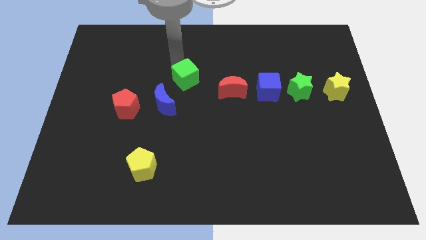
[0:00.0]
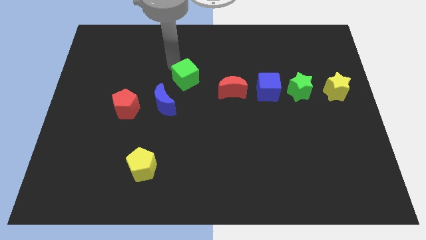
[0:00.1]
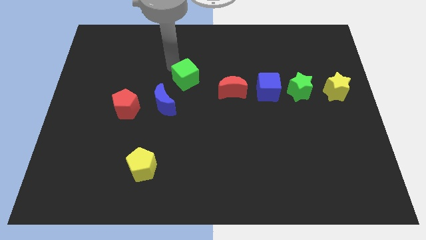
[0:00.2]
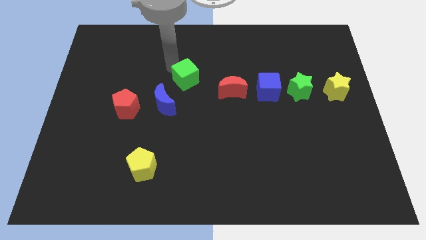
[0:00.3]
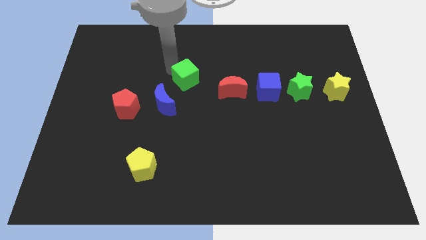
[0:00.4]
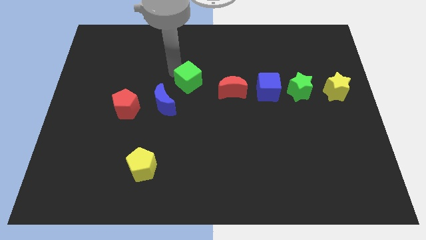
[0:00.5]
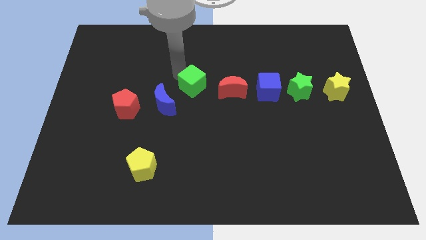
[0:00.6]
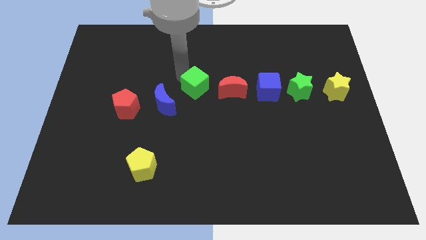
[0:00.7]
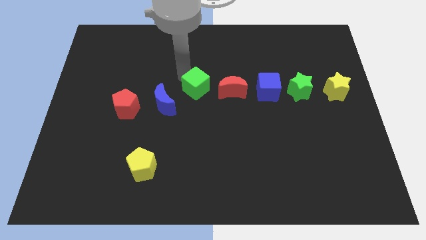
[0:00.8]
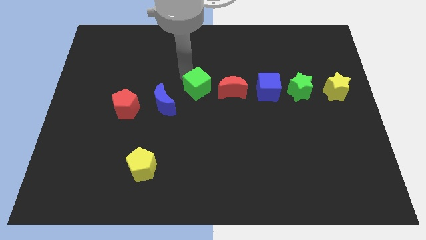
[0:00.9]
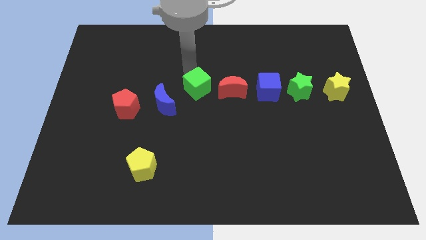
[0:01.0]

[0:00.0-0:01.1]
move green cube left beside the red moon

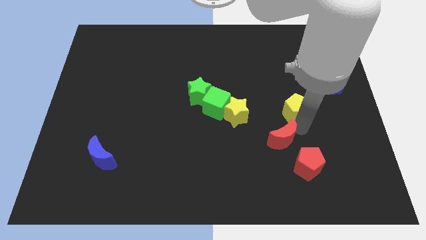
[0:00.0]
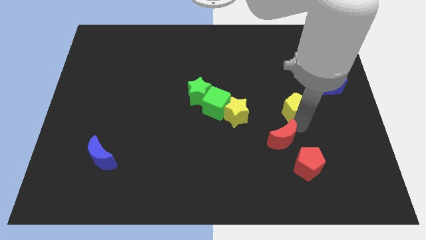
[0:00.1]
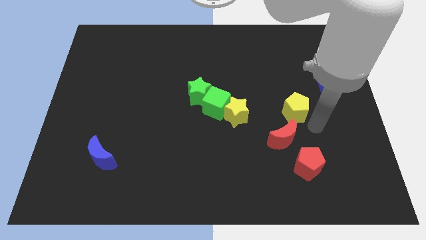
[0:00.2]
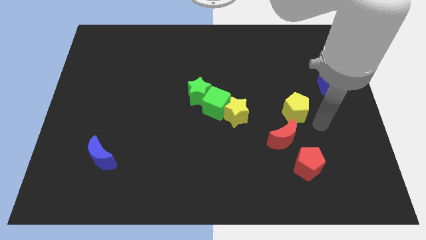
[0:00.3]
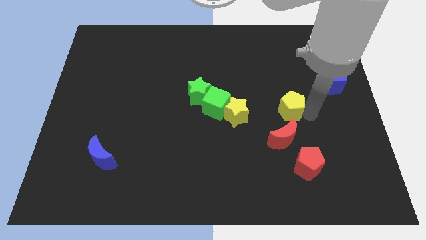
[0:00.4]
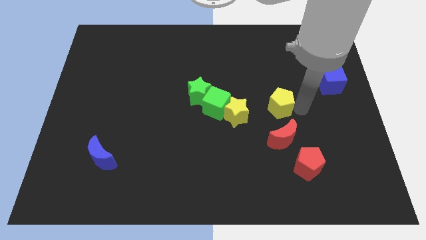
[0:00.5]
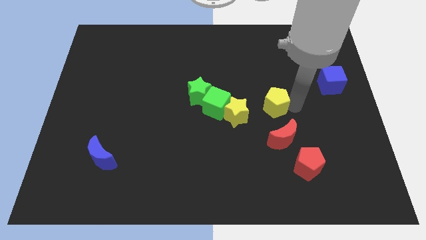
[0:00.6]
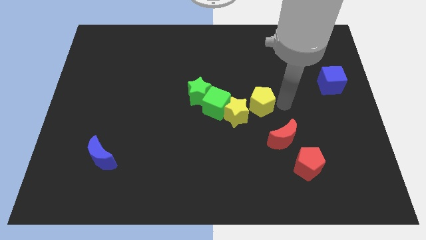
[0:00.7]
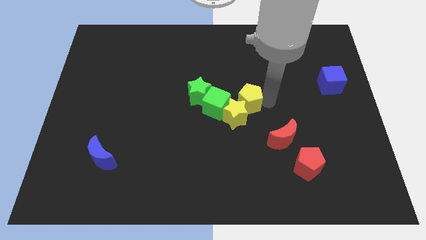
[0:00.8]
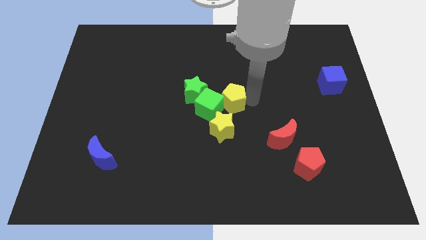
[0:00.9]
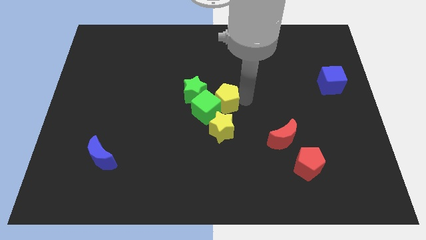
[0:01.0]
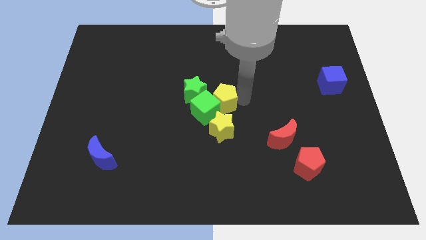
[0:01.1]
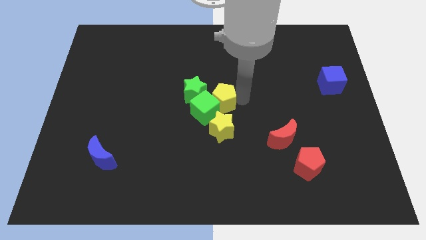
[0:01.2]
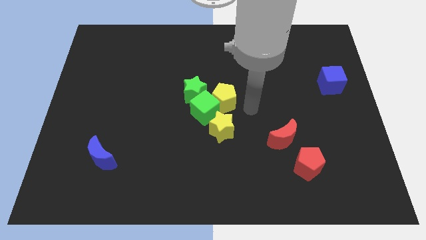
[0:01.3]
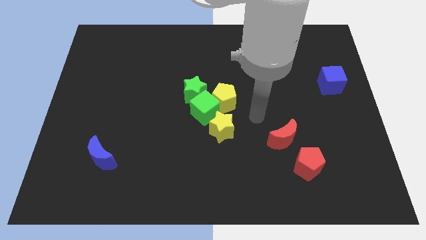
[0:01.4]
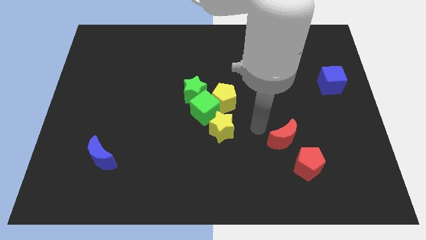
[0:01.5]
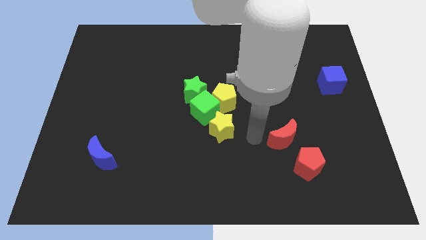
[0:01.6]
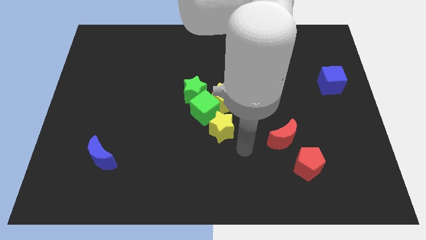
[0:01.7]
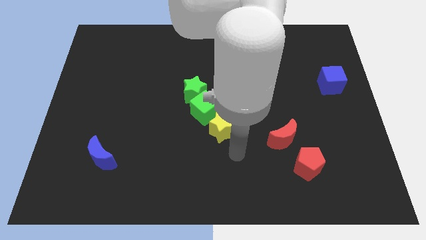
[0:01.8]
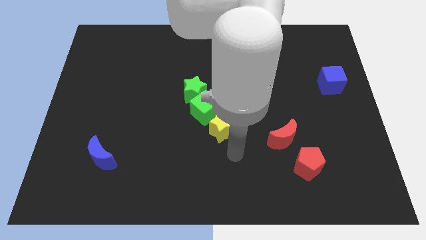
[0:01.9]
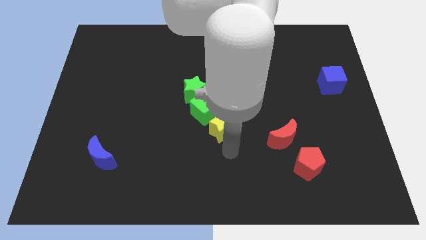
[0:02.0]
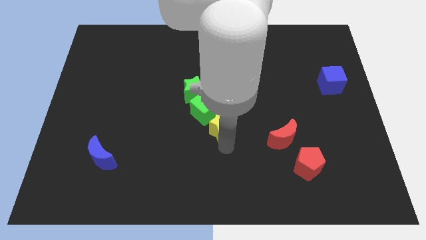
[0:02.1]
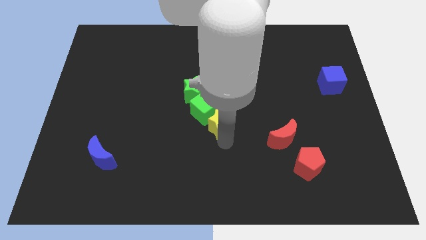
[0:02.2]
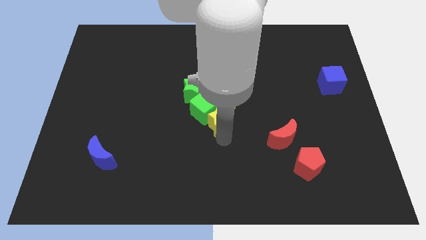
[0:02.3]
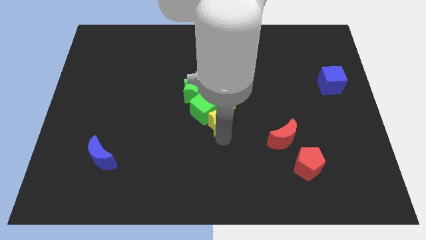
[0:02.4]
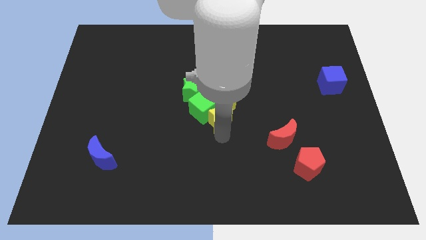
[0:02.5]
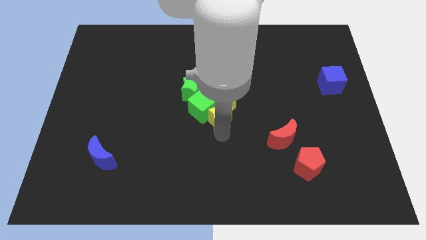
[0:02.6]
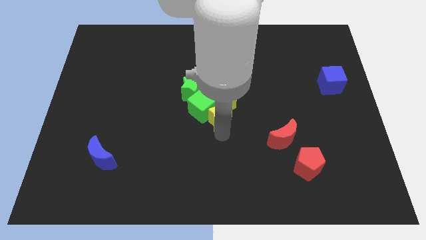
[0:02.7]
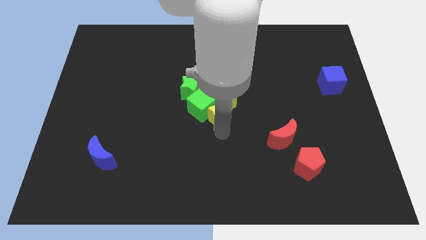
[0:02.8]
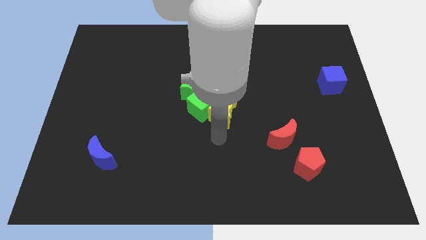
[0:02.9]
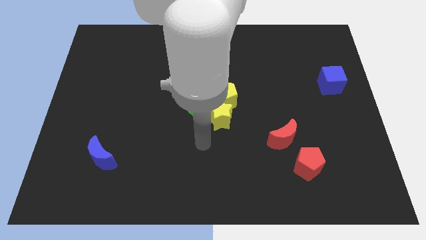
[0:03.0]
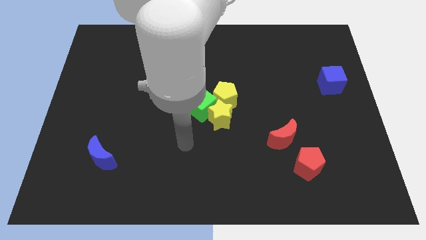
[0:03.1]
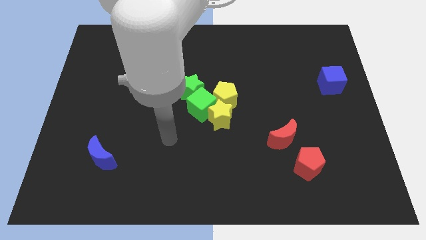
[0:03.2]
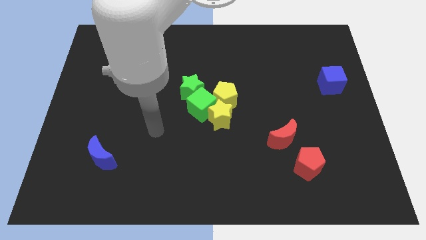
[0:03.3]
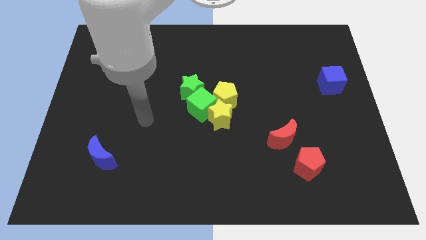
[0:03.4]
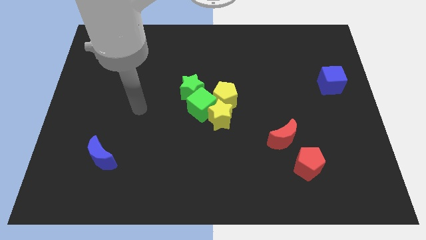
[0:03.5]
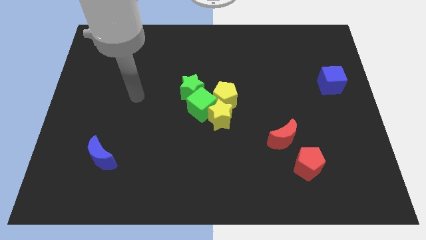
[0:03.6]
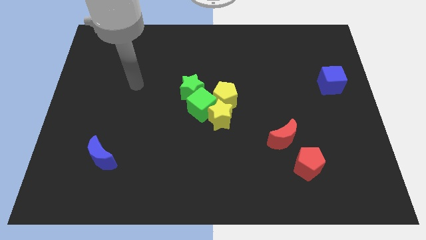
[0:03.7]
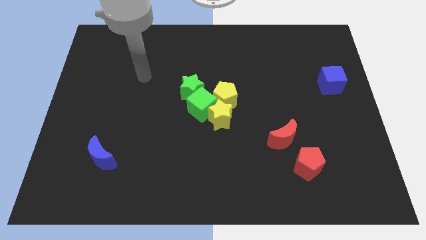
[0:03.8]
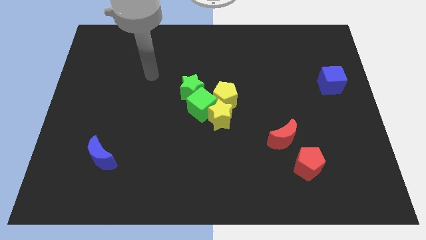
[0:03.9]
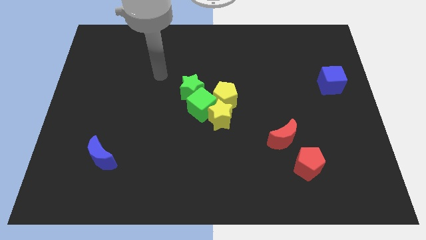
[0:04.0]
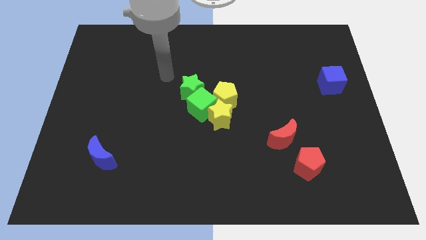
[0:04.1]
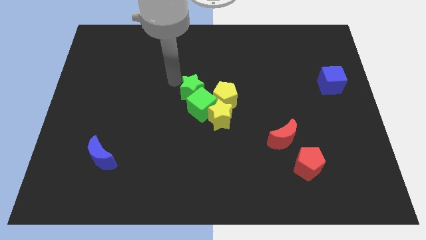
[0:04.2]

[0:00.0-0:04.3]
push the yellow pentagon into the green cube

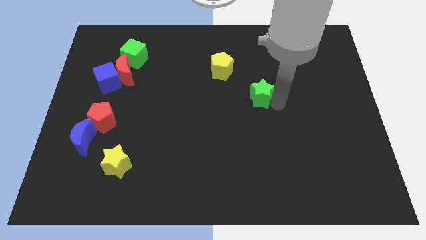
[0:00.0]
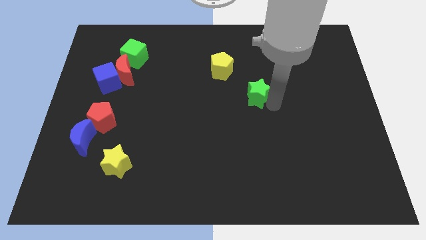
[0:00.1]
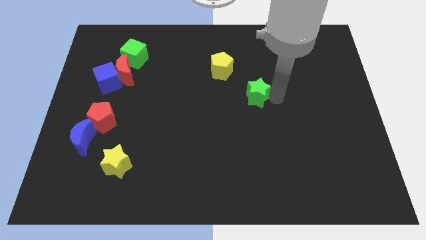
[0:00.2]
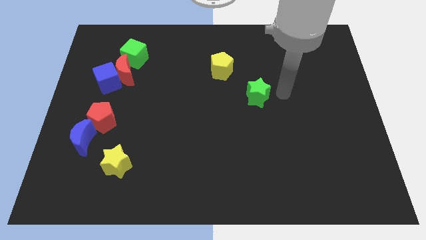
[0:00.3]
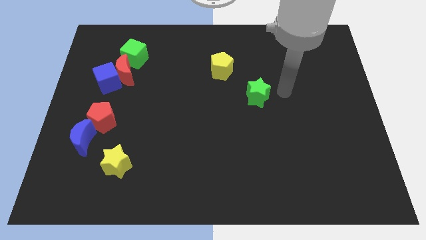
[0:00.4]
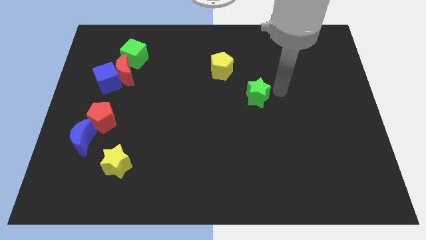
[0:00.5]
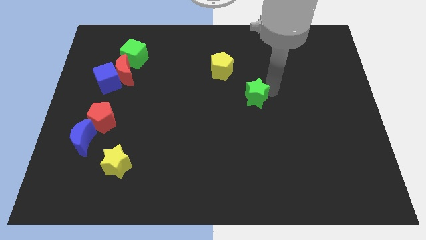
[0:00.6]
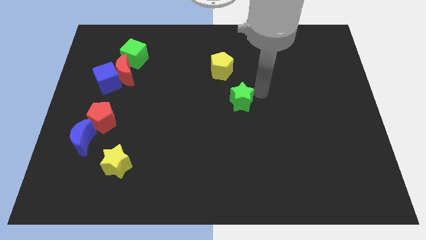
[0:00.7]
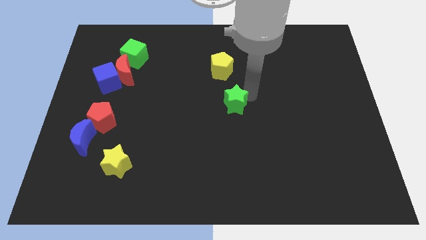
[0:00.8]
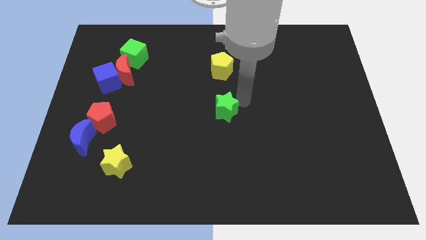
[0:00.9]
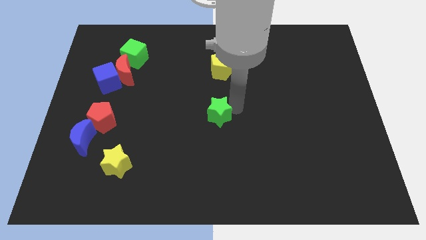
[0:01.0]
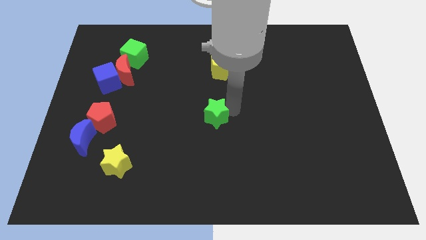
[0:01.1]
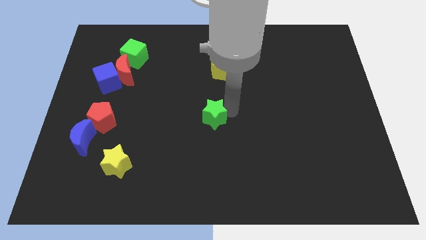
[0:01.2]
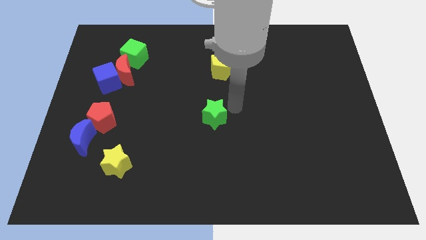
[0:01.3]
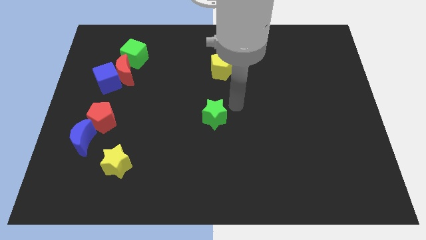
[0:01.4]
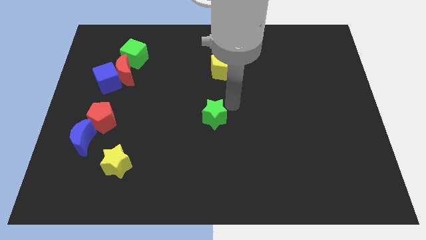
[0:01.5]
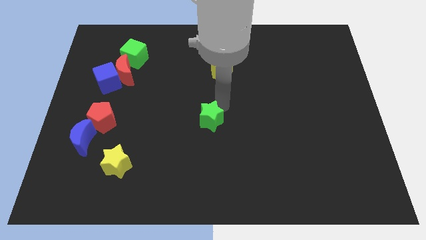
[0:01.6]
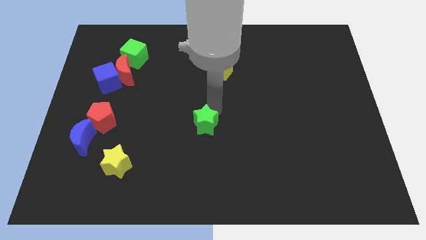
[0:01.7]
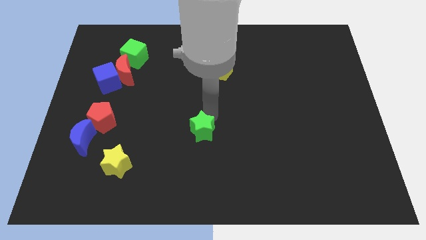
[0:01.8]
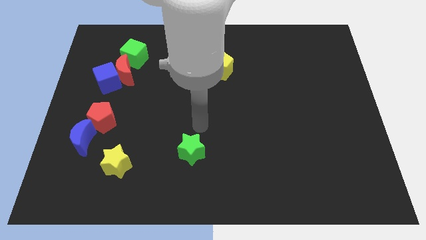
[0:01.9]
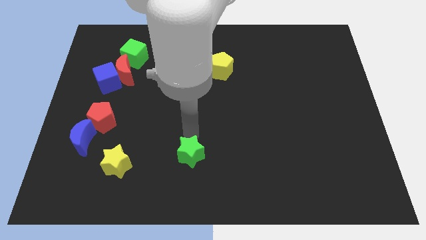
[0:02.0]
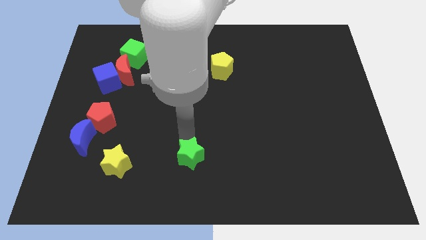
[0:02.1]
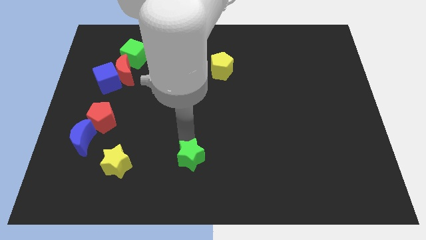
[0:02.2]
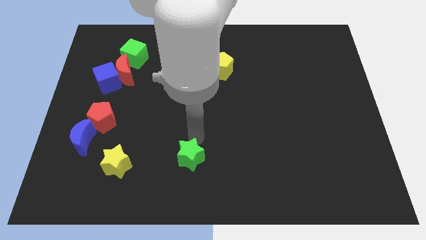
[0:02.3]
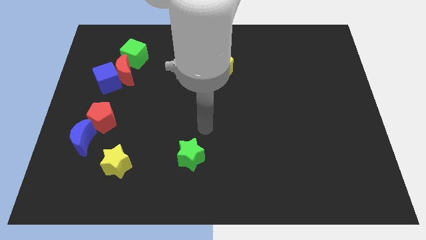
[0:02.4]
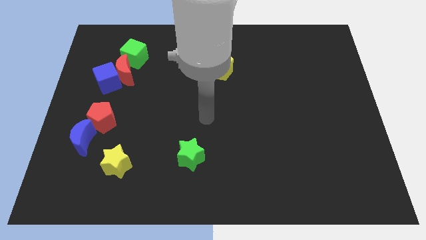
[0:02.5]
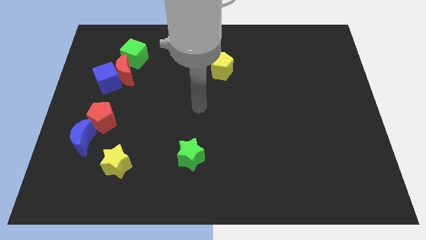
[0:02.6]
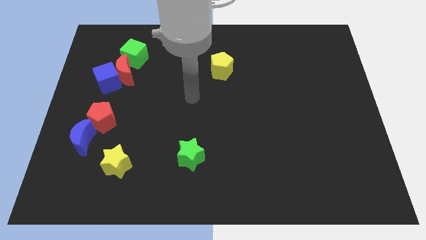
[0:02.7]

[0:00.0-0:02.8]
place the green star to the right of yellow star

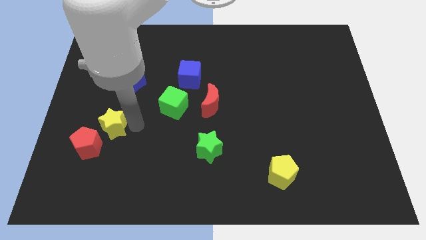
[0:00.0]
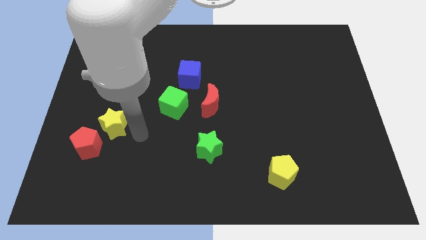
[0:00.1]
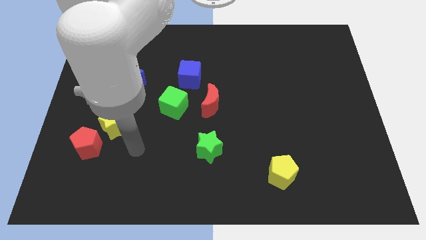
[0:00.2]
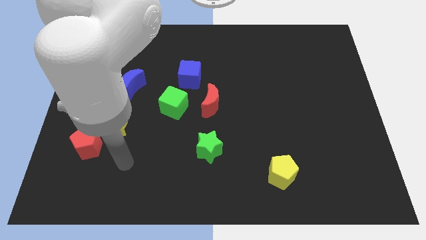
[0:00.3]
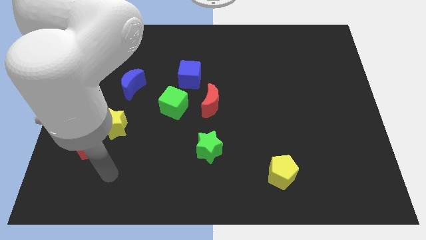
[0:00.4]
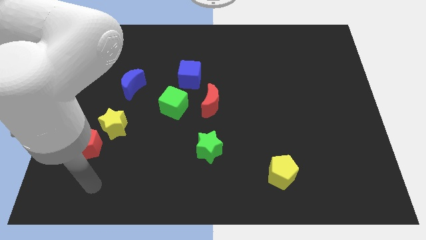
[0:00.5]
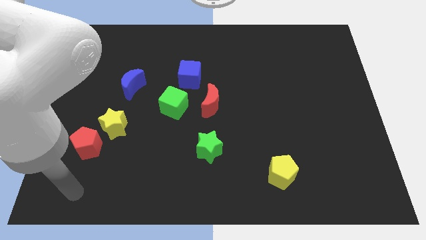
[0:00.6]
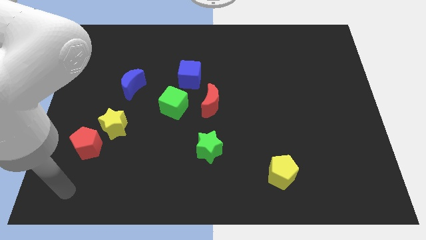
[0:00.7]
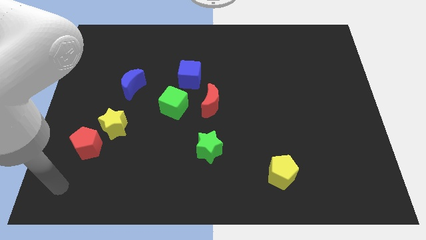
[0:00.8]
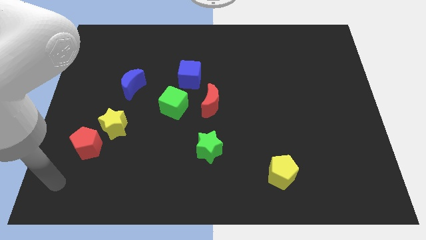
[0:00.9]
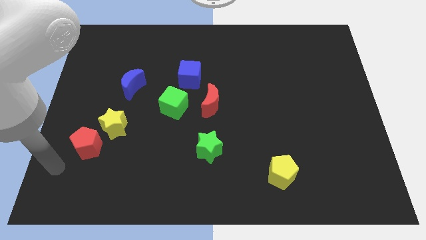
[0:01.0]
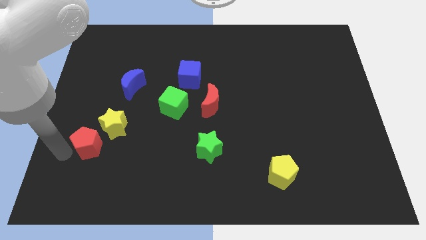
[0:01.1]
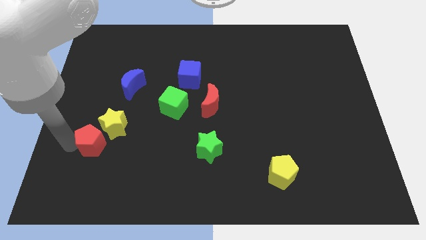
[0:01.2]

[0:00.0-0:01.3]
move your arm towards the bottom left of the red pentagon
